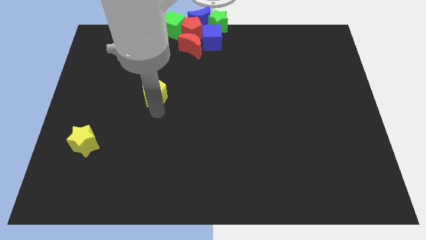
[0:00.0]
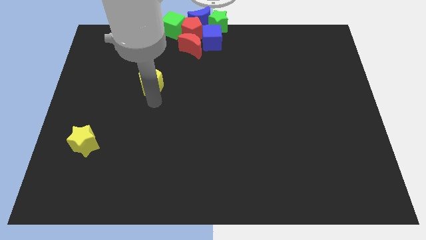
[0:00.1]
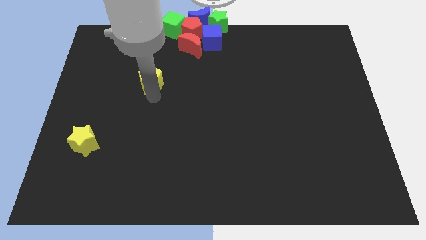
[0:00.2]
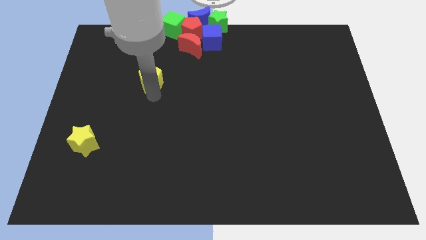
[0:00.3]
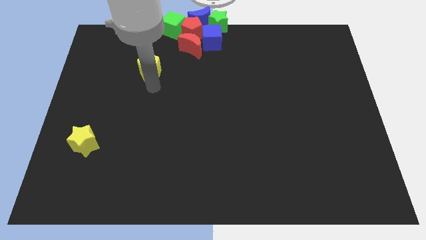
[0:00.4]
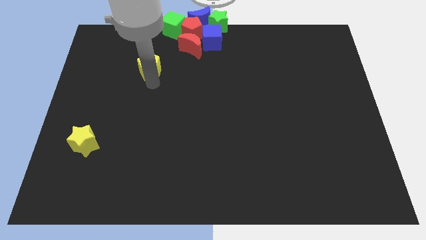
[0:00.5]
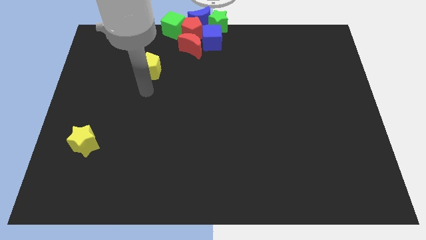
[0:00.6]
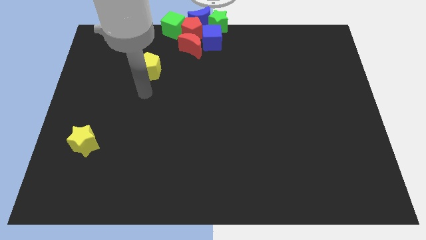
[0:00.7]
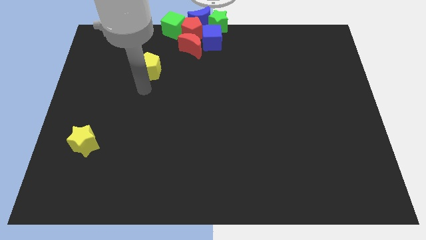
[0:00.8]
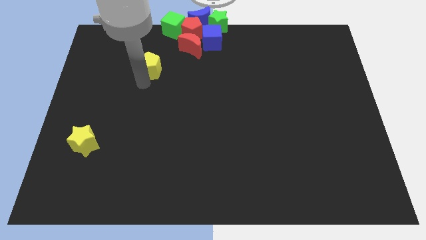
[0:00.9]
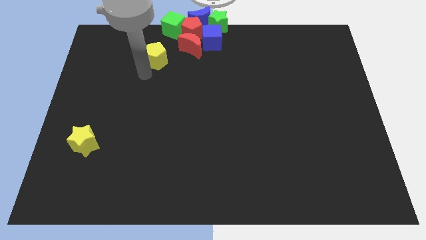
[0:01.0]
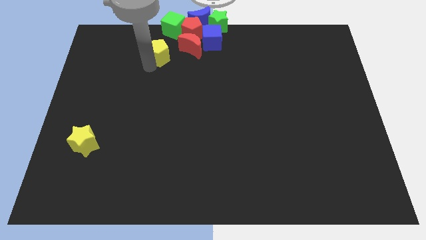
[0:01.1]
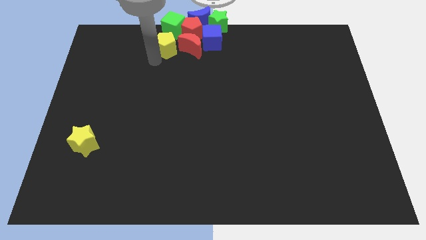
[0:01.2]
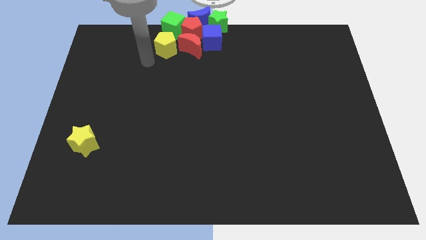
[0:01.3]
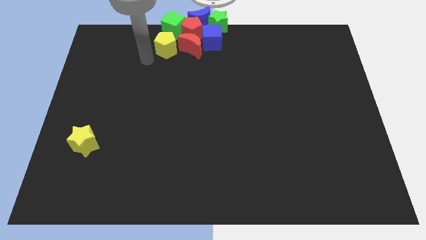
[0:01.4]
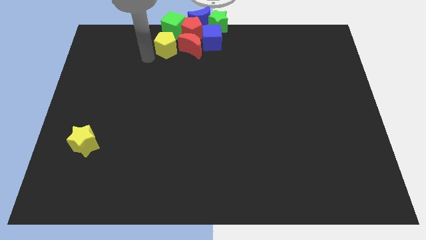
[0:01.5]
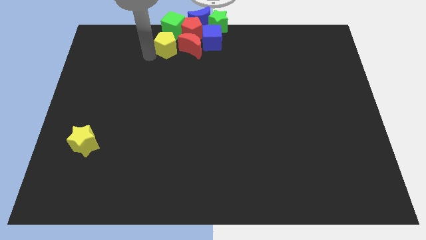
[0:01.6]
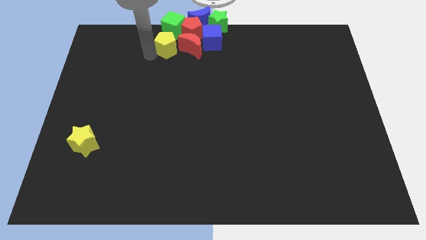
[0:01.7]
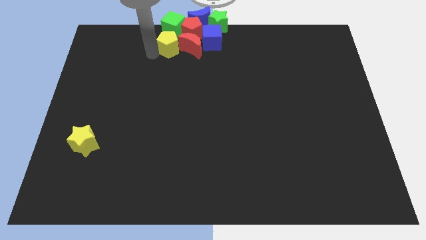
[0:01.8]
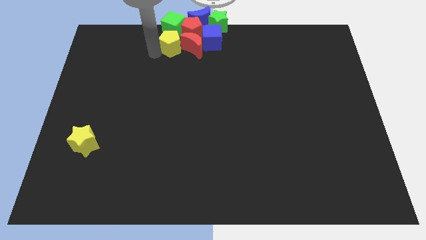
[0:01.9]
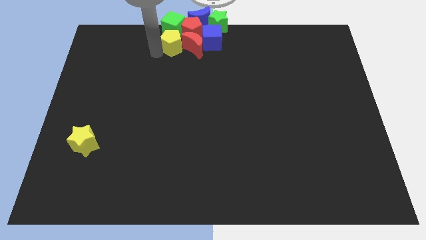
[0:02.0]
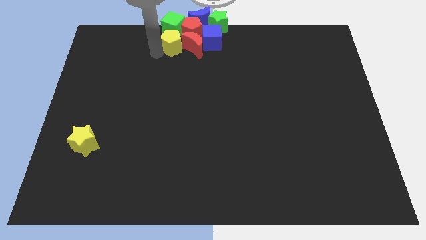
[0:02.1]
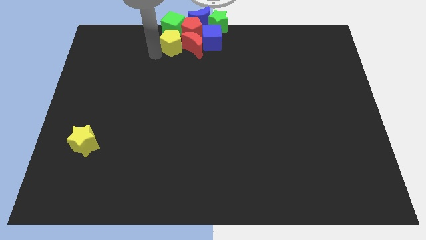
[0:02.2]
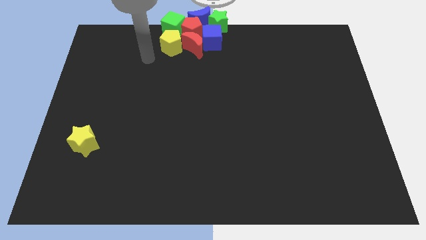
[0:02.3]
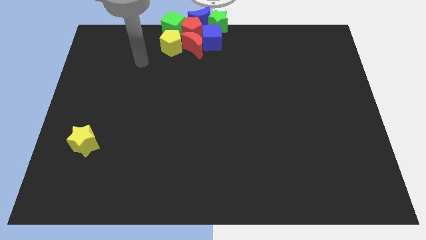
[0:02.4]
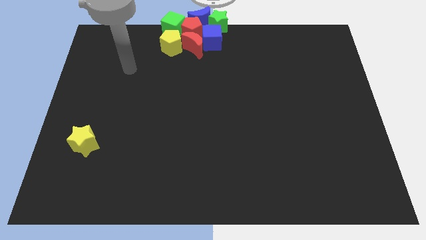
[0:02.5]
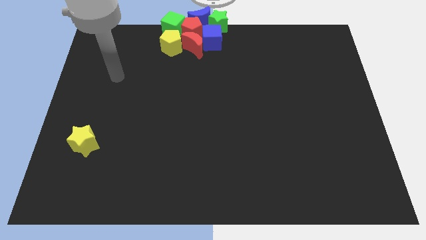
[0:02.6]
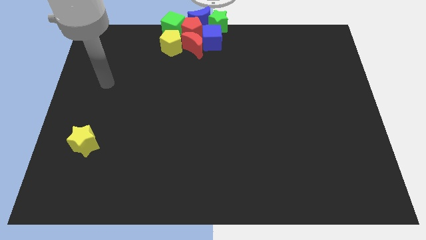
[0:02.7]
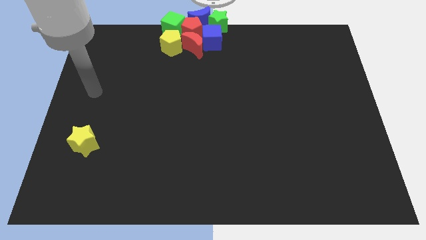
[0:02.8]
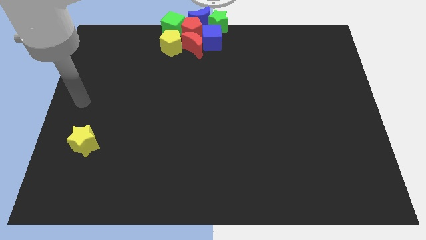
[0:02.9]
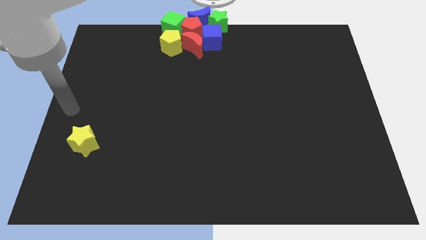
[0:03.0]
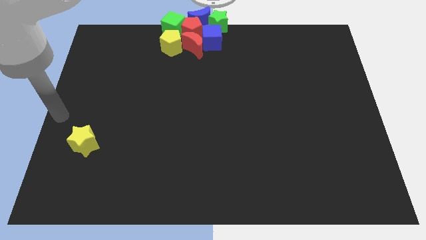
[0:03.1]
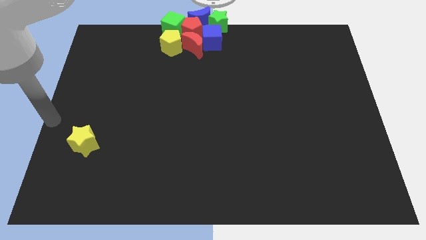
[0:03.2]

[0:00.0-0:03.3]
place the yellow pentagon down to the green cube

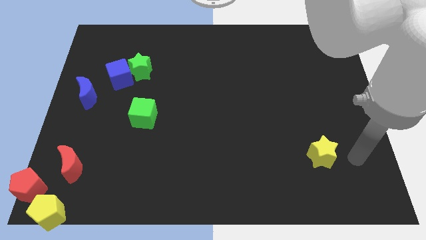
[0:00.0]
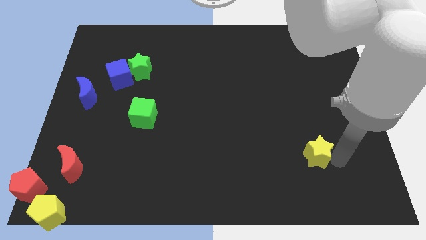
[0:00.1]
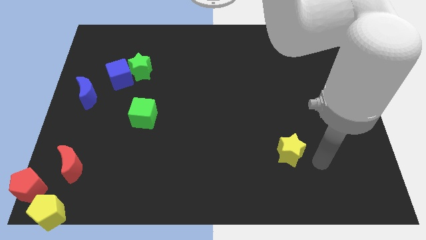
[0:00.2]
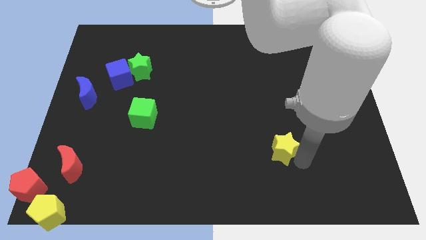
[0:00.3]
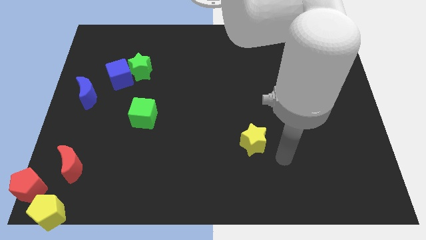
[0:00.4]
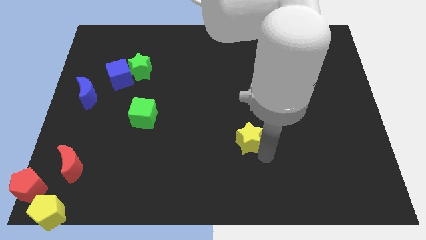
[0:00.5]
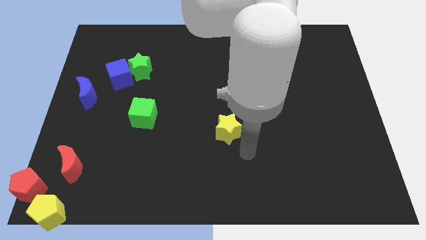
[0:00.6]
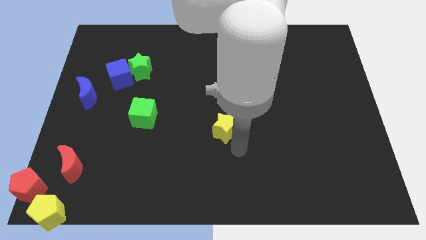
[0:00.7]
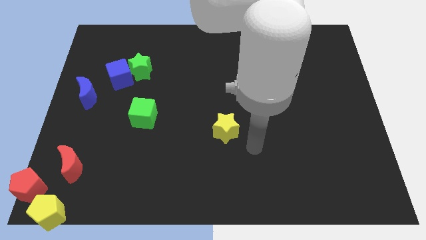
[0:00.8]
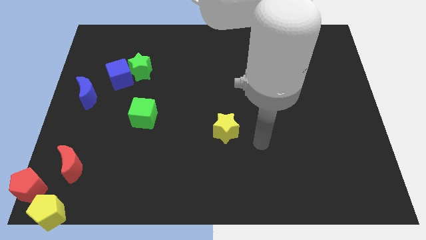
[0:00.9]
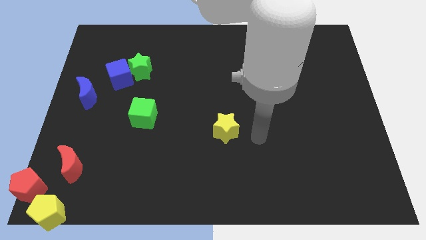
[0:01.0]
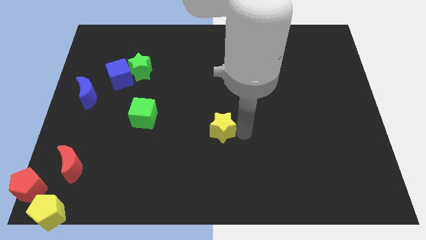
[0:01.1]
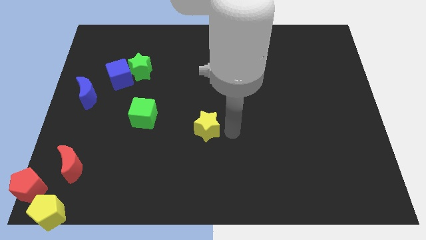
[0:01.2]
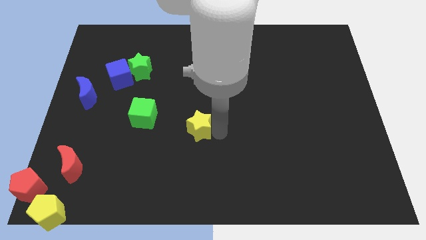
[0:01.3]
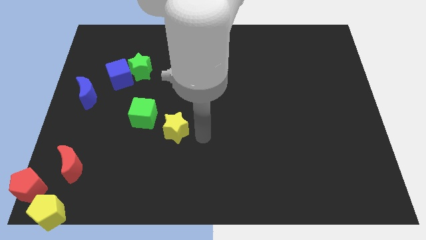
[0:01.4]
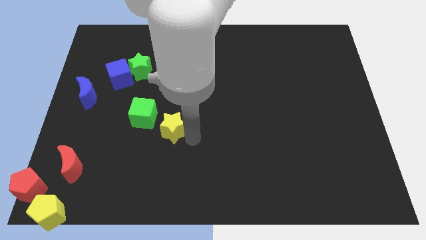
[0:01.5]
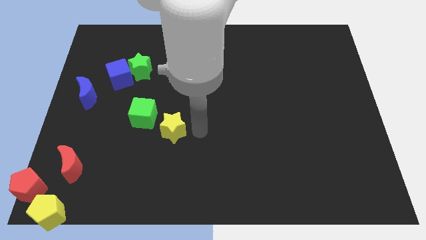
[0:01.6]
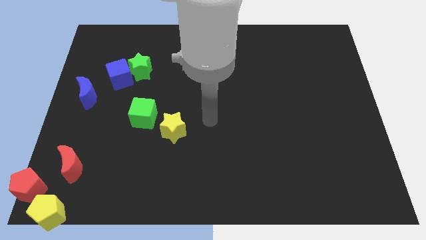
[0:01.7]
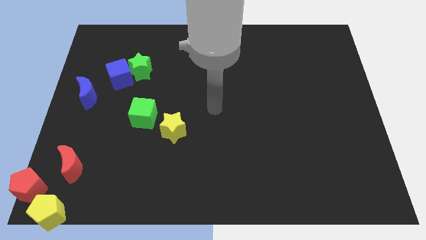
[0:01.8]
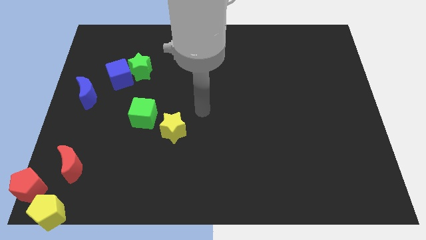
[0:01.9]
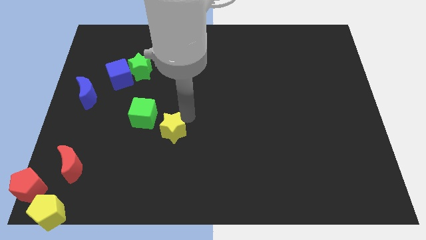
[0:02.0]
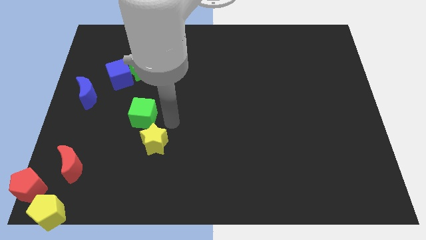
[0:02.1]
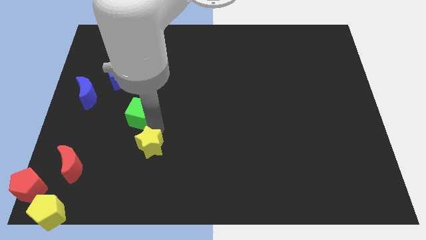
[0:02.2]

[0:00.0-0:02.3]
move the yellow star below to the green cube

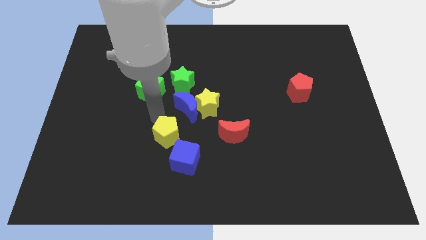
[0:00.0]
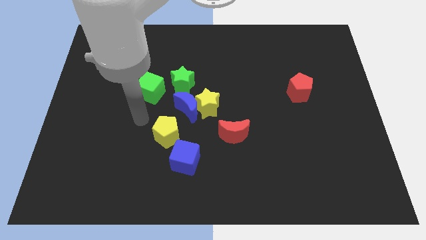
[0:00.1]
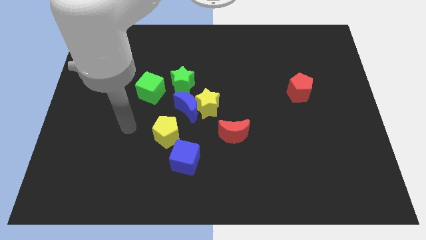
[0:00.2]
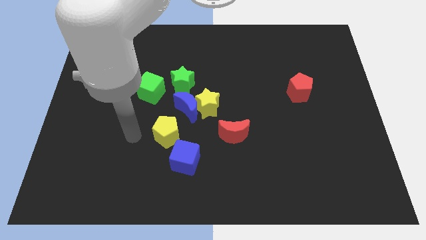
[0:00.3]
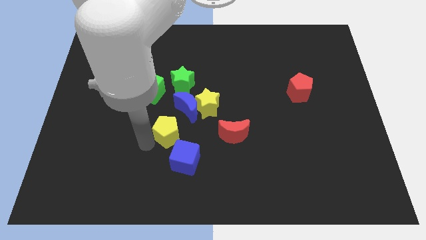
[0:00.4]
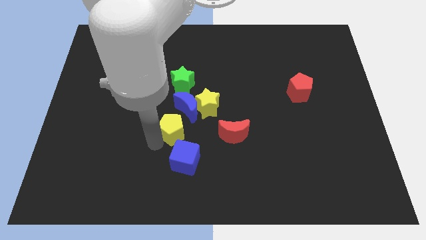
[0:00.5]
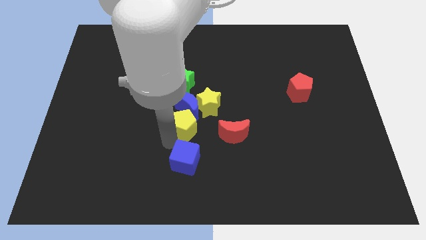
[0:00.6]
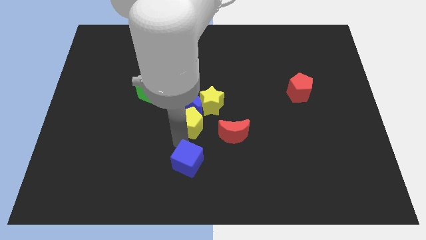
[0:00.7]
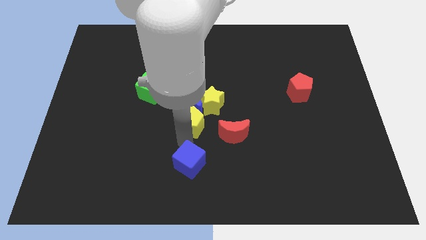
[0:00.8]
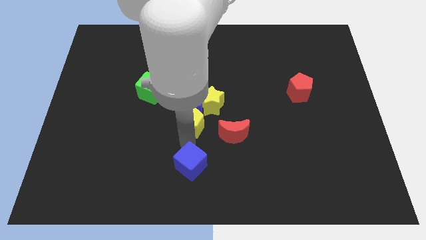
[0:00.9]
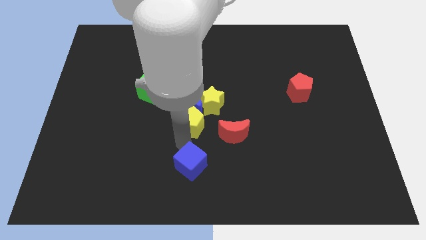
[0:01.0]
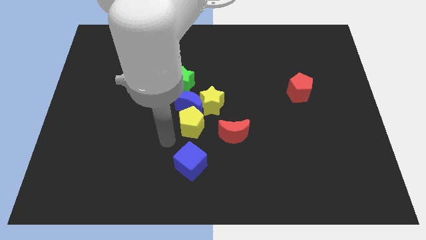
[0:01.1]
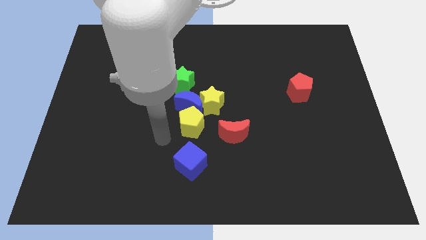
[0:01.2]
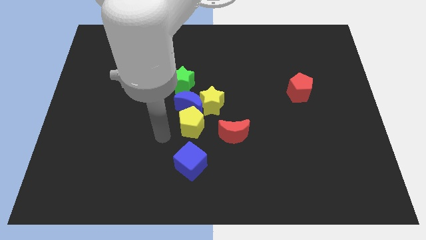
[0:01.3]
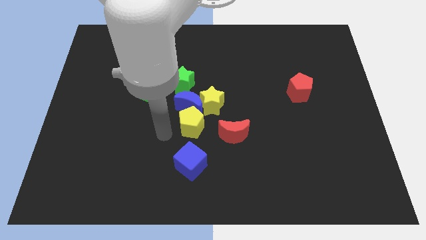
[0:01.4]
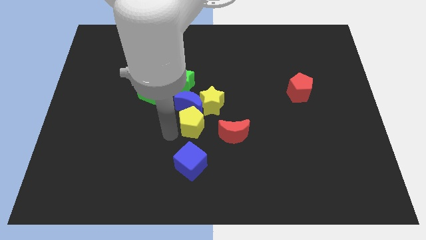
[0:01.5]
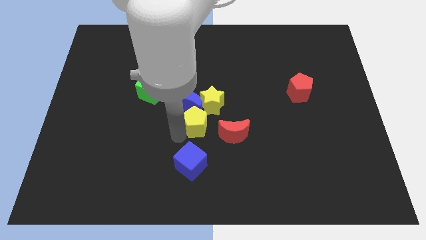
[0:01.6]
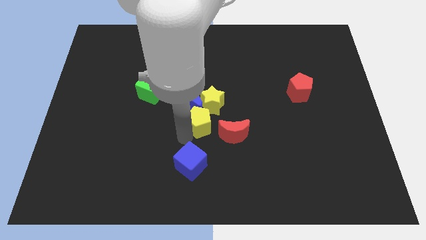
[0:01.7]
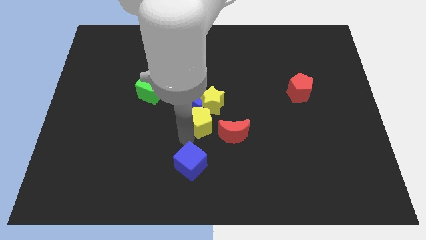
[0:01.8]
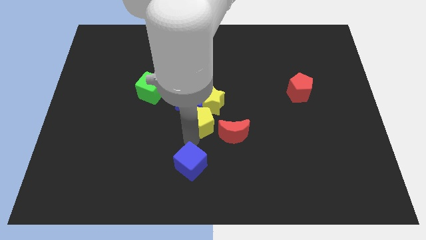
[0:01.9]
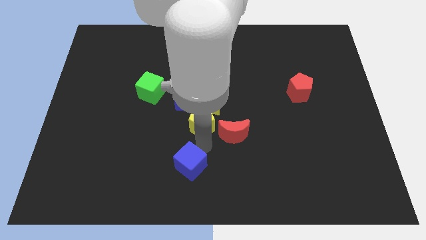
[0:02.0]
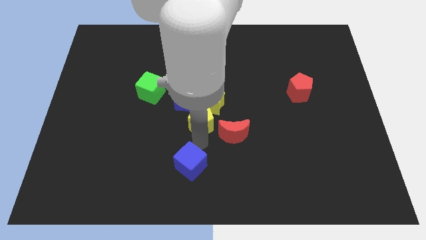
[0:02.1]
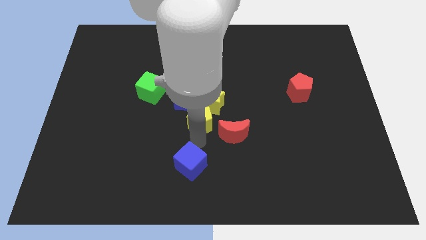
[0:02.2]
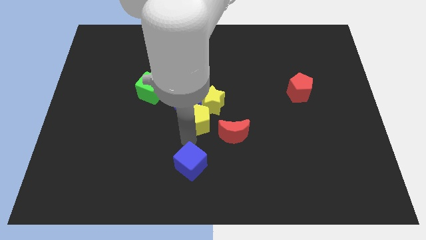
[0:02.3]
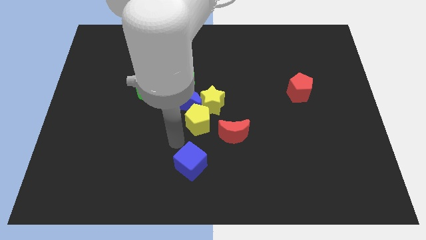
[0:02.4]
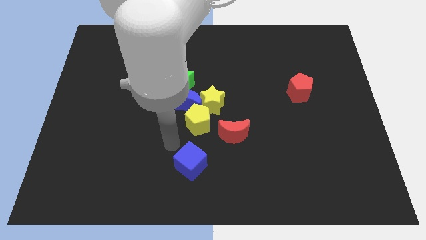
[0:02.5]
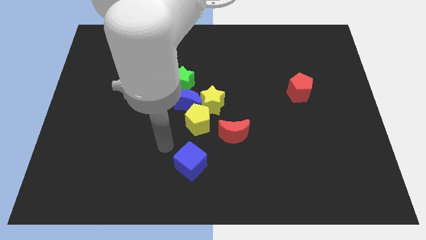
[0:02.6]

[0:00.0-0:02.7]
separate the yellow pentagon and blue cube

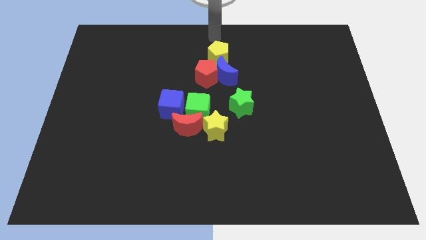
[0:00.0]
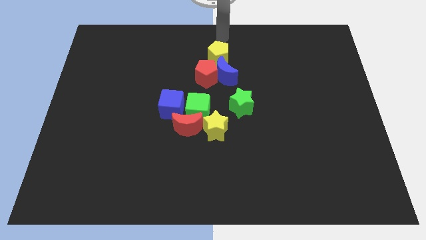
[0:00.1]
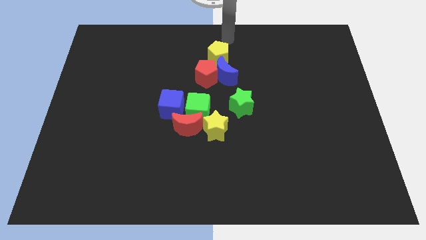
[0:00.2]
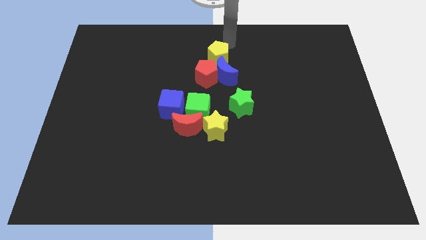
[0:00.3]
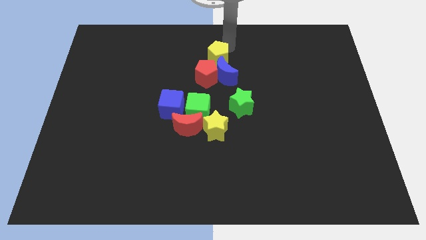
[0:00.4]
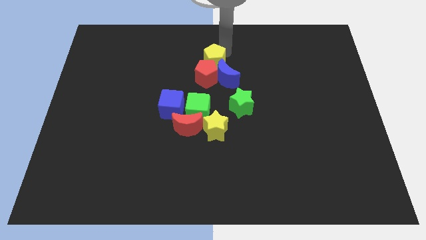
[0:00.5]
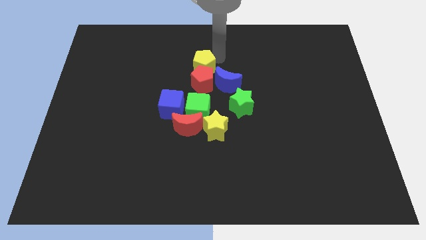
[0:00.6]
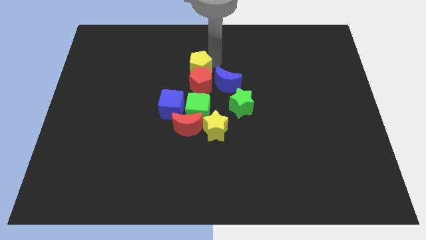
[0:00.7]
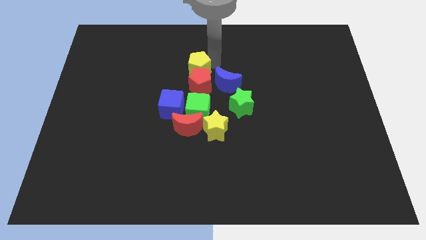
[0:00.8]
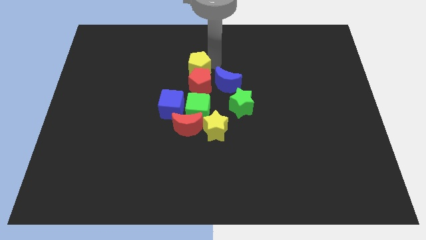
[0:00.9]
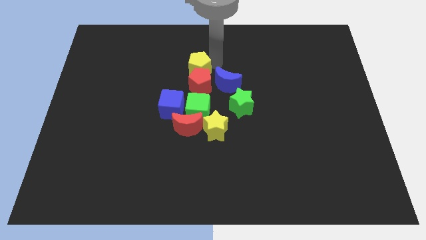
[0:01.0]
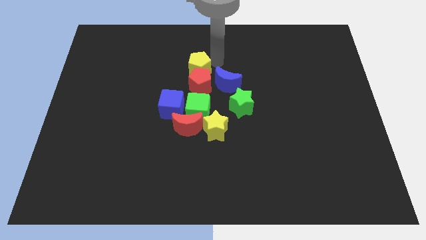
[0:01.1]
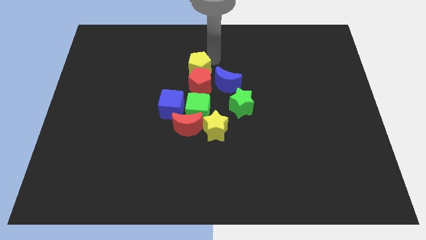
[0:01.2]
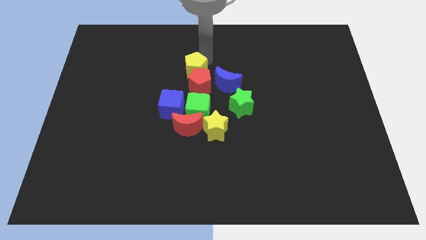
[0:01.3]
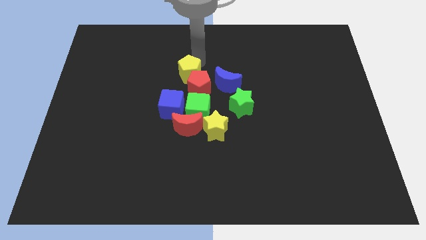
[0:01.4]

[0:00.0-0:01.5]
move yellow pentagon into red pentagon
